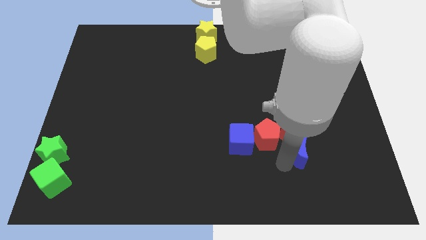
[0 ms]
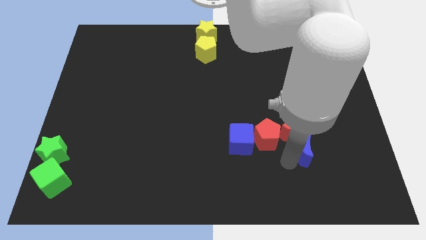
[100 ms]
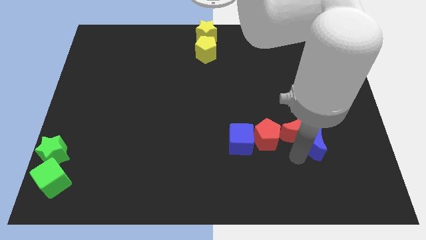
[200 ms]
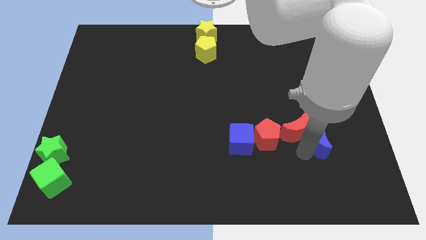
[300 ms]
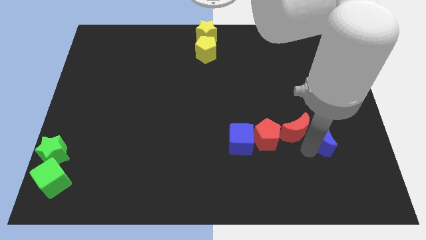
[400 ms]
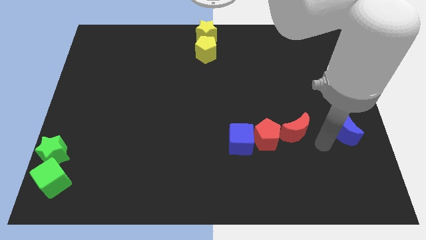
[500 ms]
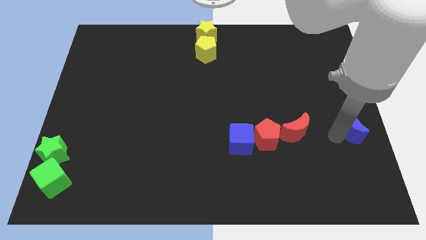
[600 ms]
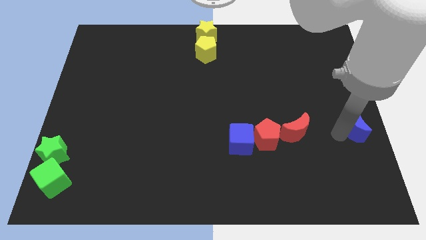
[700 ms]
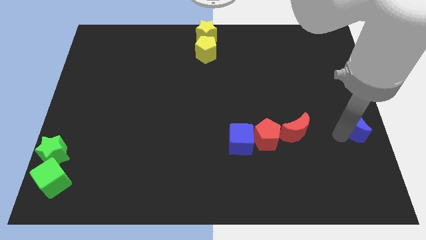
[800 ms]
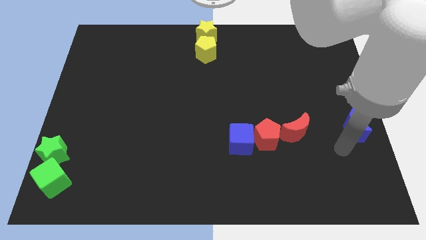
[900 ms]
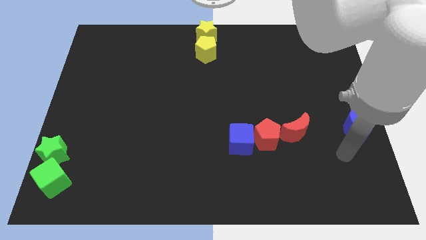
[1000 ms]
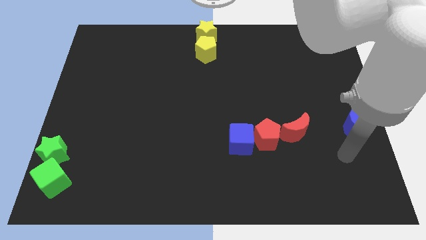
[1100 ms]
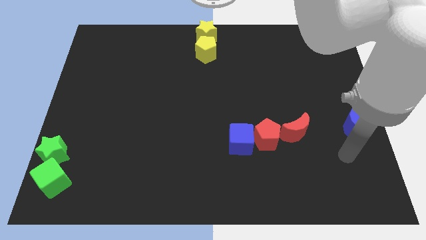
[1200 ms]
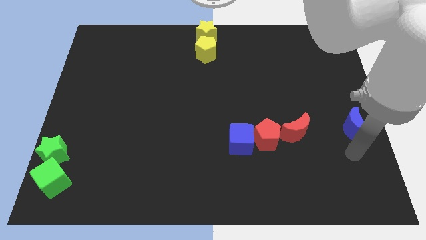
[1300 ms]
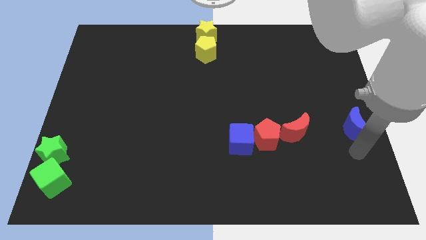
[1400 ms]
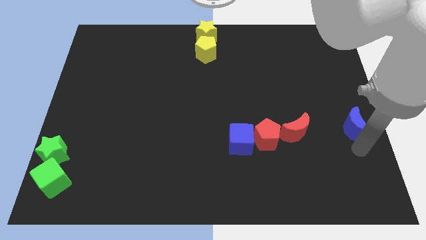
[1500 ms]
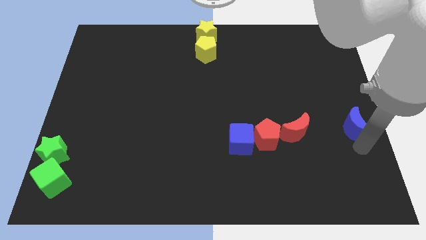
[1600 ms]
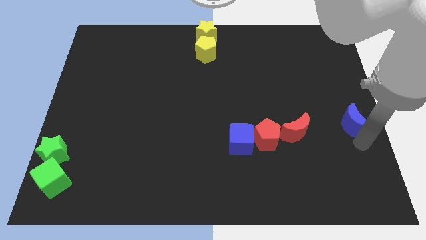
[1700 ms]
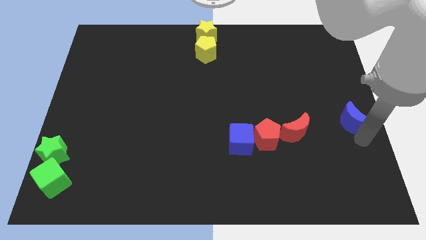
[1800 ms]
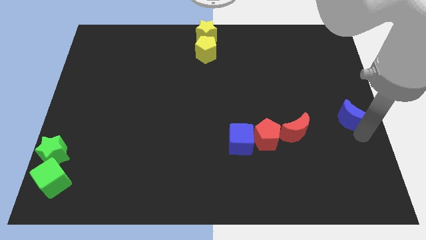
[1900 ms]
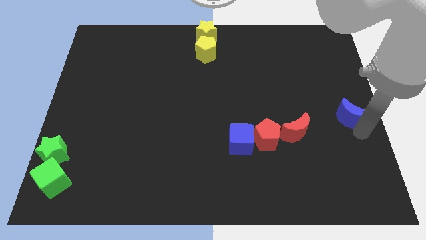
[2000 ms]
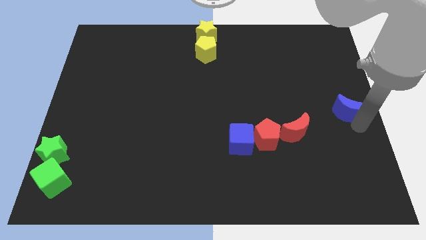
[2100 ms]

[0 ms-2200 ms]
move the blue moon away from the red moon

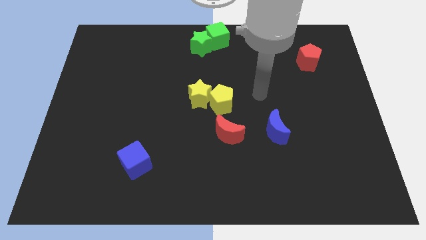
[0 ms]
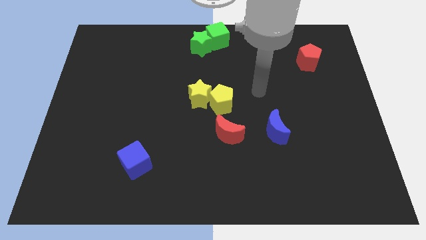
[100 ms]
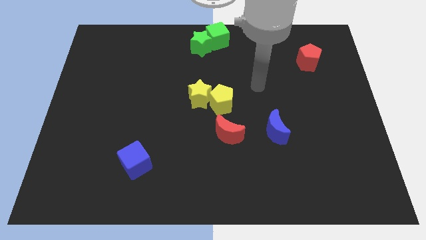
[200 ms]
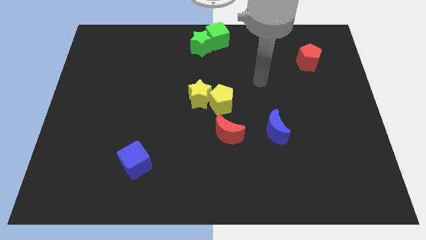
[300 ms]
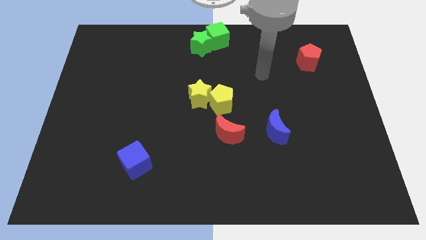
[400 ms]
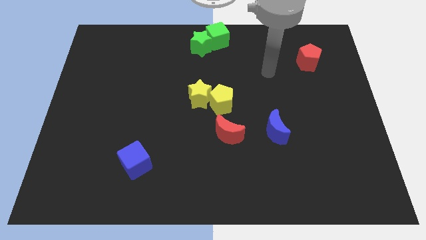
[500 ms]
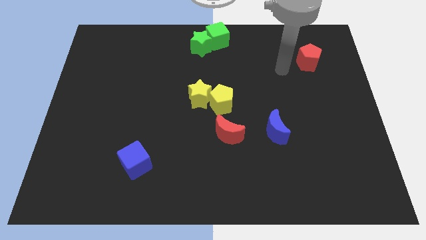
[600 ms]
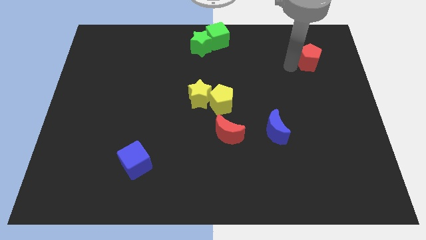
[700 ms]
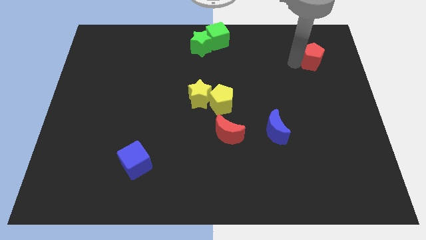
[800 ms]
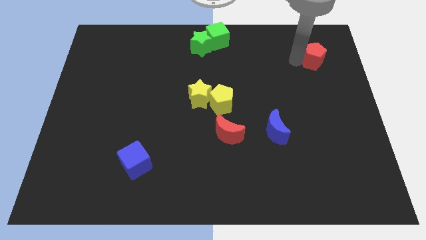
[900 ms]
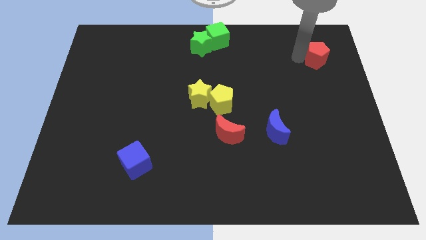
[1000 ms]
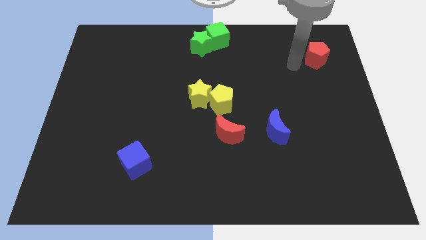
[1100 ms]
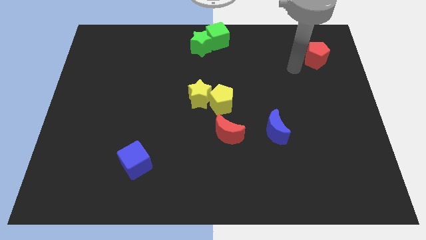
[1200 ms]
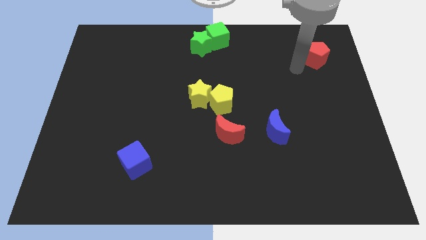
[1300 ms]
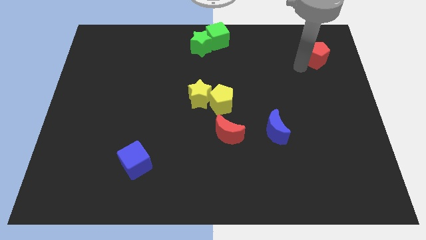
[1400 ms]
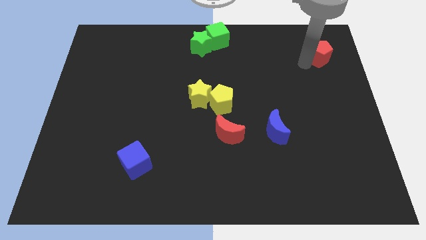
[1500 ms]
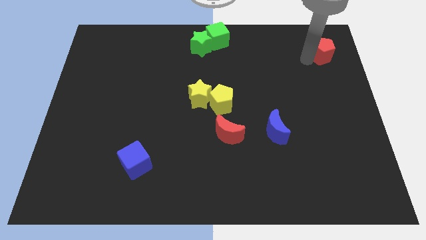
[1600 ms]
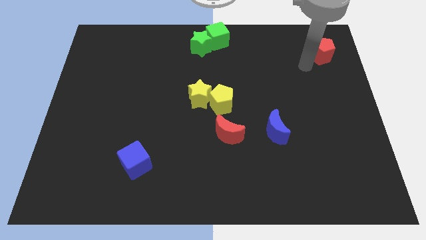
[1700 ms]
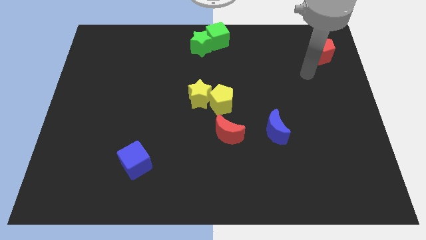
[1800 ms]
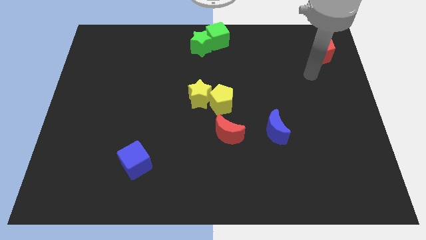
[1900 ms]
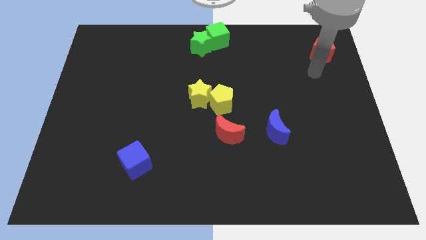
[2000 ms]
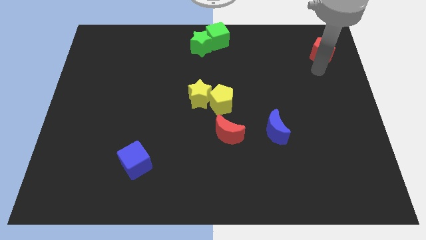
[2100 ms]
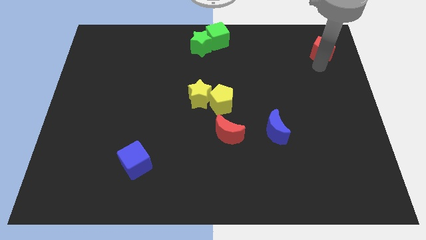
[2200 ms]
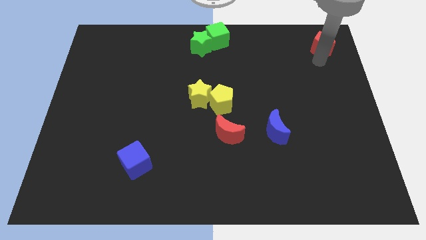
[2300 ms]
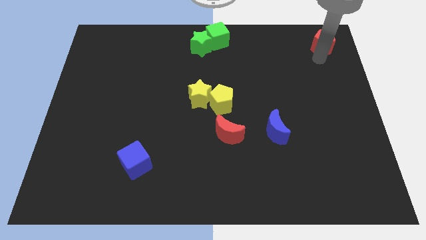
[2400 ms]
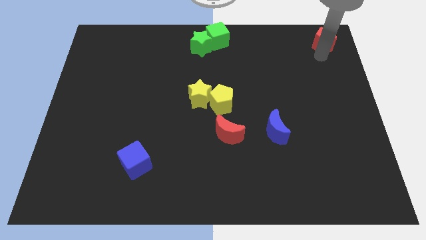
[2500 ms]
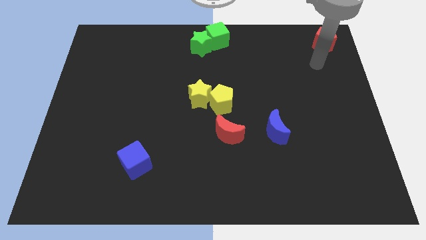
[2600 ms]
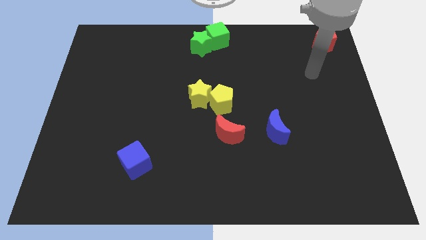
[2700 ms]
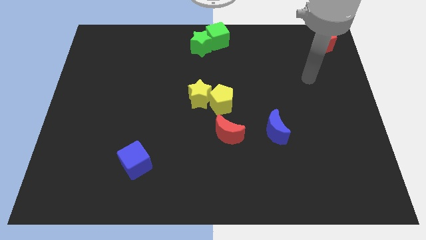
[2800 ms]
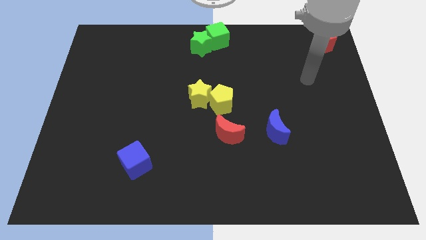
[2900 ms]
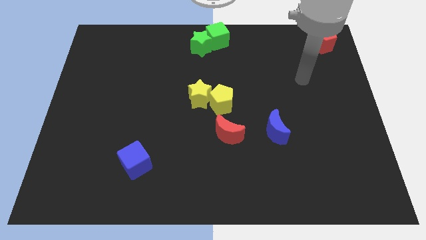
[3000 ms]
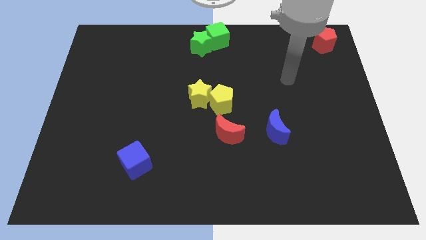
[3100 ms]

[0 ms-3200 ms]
move the red pentagon to the top right corner of the board

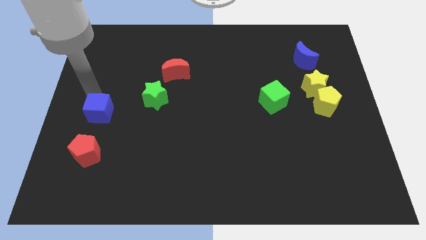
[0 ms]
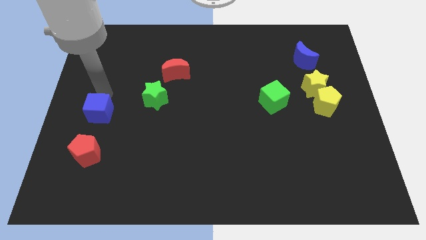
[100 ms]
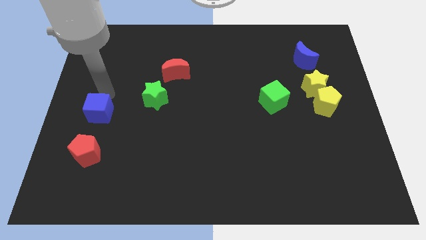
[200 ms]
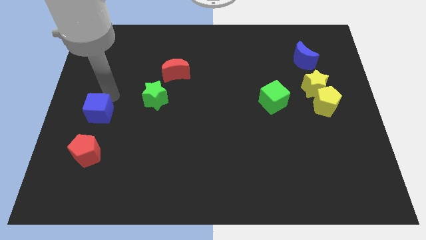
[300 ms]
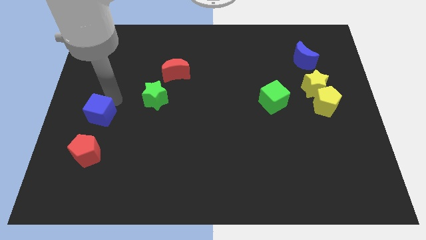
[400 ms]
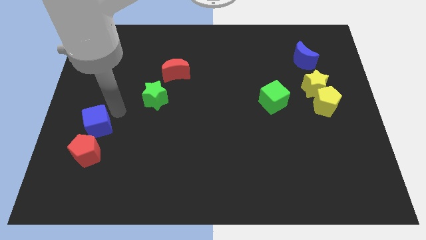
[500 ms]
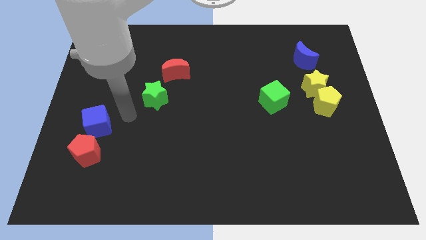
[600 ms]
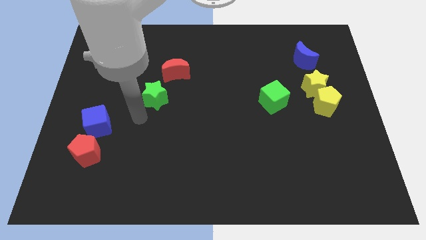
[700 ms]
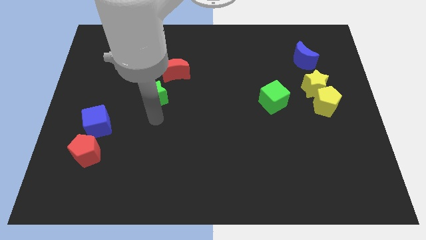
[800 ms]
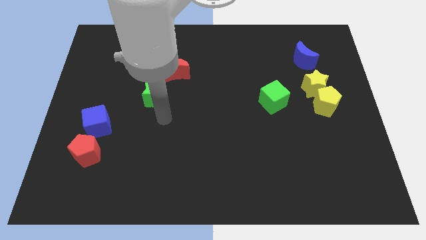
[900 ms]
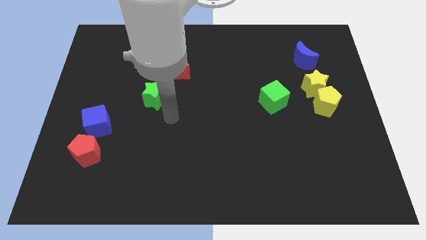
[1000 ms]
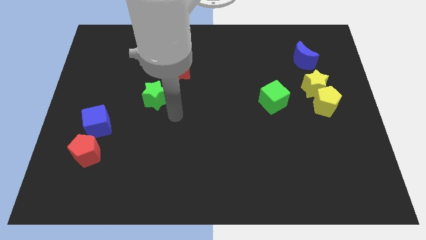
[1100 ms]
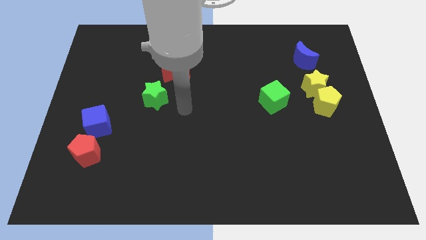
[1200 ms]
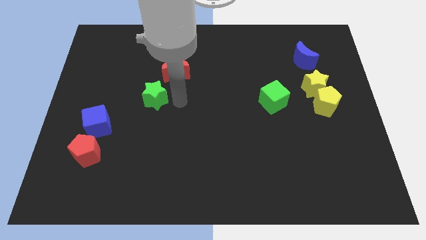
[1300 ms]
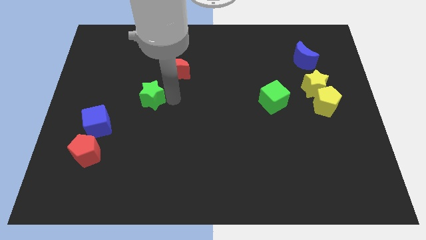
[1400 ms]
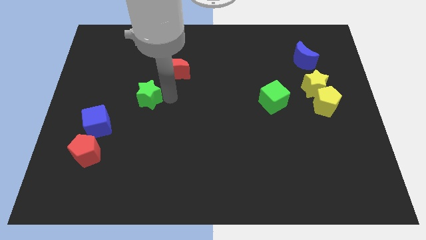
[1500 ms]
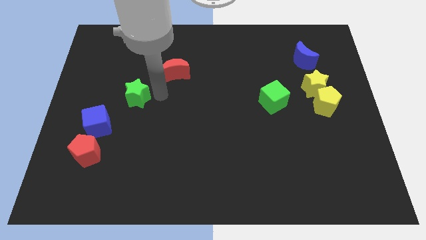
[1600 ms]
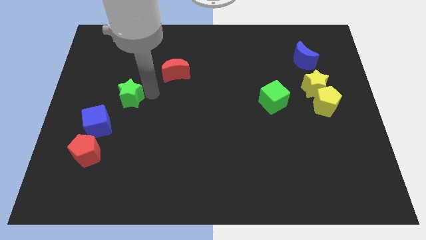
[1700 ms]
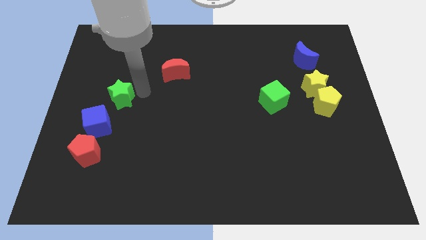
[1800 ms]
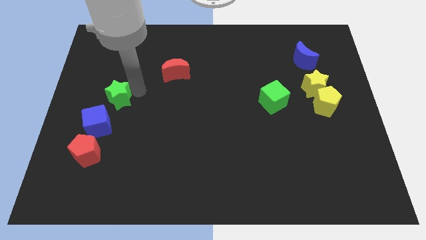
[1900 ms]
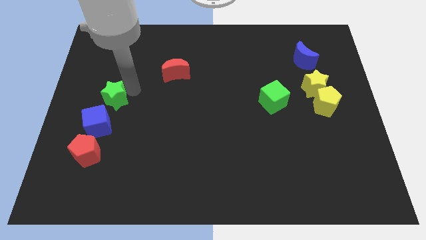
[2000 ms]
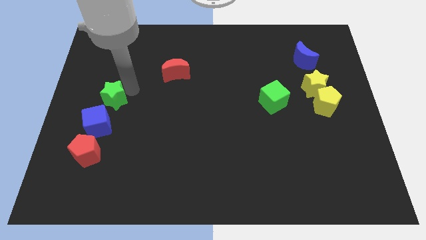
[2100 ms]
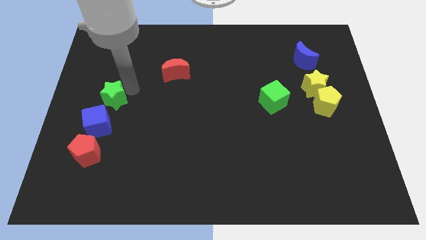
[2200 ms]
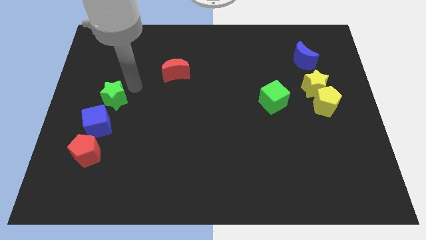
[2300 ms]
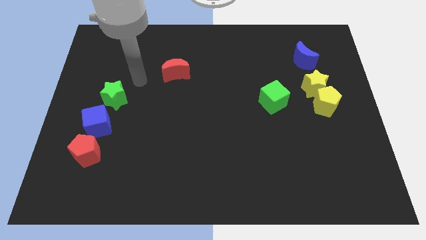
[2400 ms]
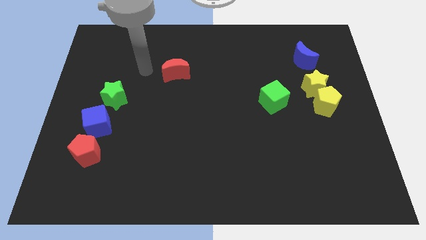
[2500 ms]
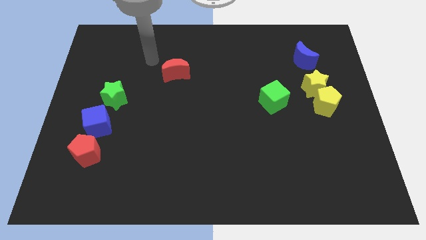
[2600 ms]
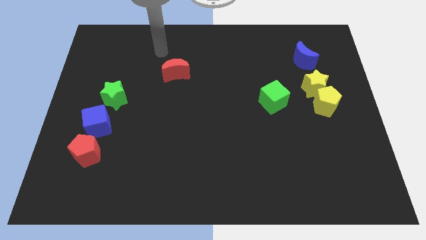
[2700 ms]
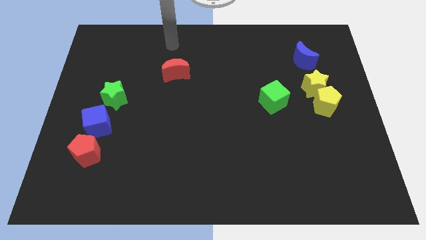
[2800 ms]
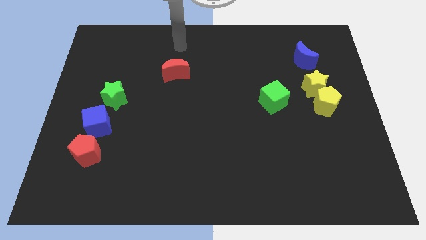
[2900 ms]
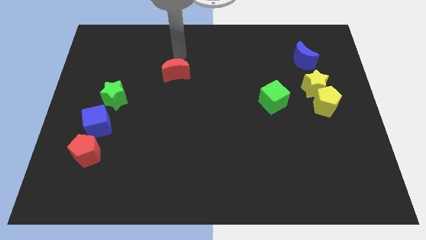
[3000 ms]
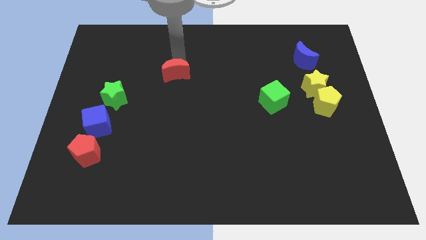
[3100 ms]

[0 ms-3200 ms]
move the green star above the blue cube

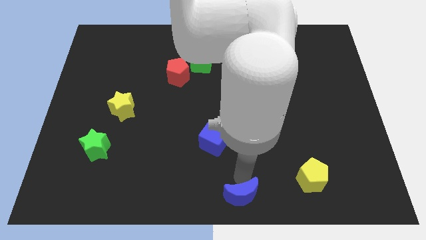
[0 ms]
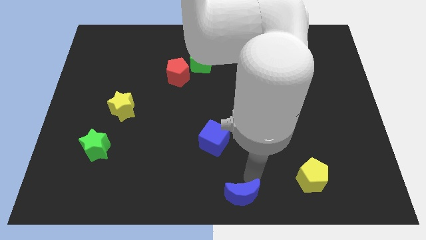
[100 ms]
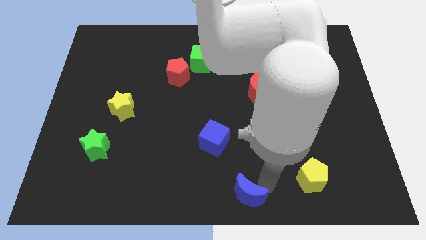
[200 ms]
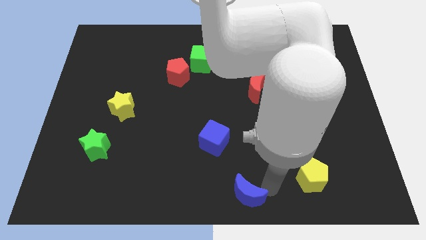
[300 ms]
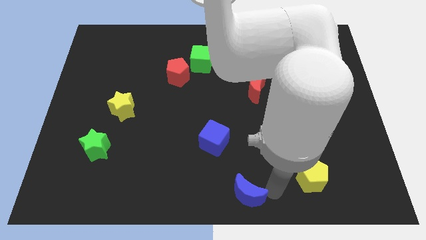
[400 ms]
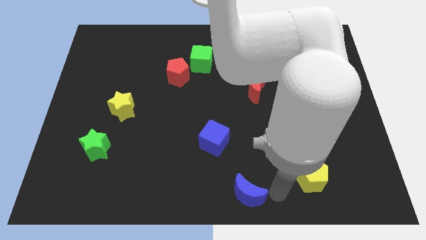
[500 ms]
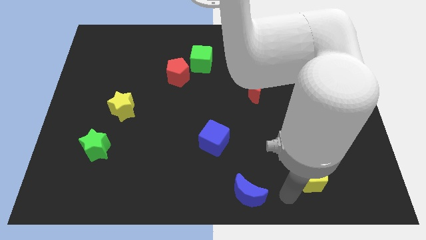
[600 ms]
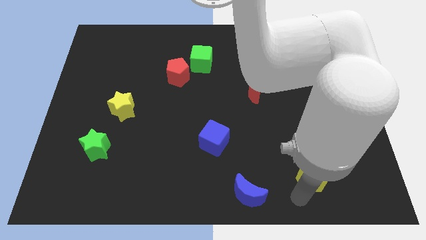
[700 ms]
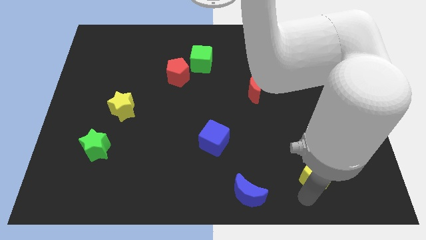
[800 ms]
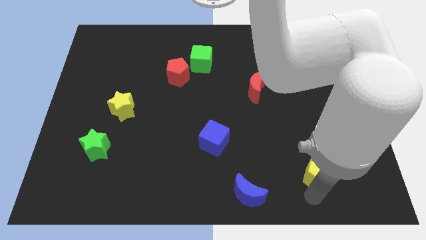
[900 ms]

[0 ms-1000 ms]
place your arm below yellow pentagon
